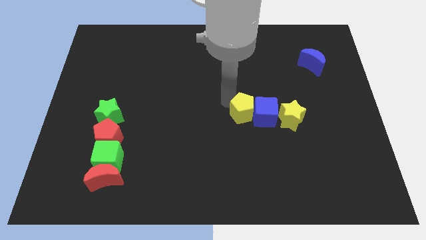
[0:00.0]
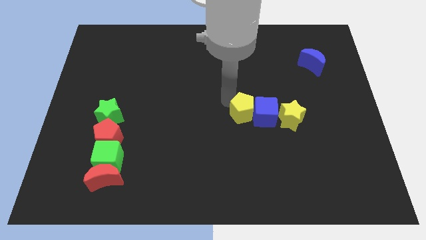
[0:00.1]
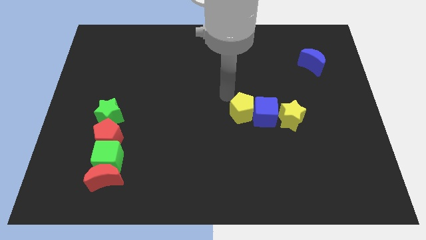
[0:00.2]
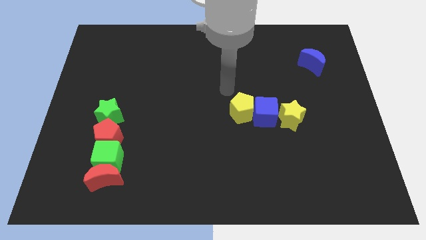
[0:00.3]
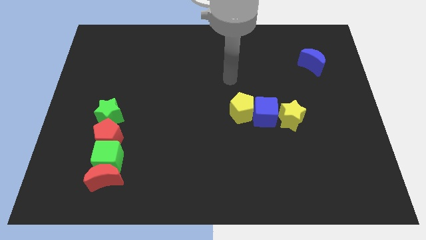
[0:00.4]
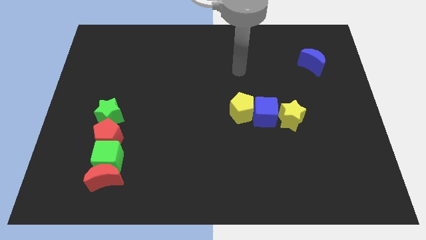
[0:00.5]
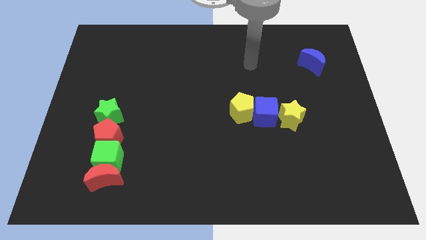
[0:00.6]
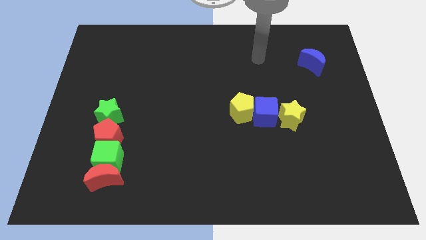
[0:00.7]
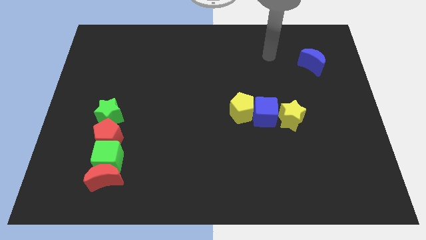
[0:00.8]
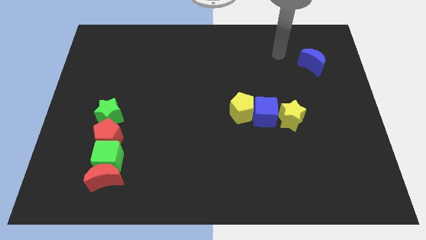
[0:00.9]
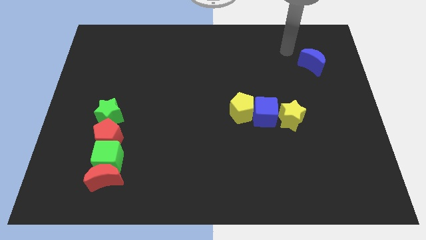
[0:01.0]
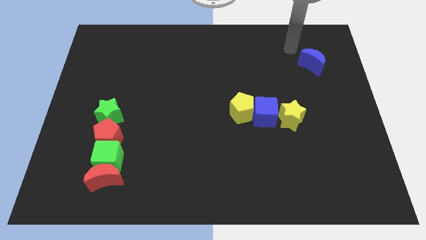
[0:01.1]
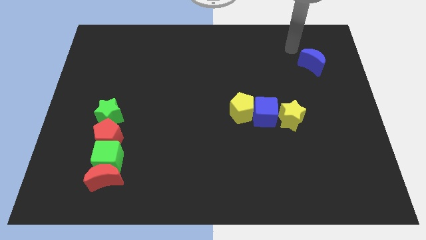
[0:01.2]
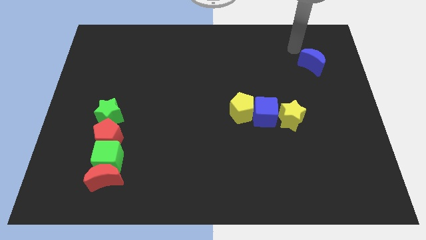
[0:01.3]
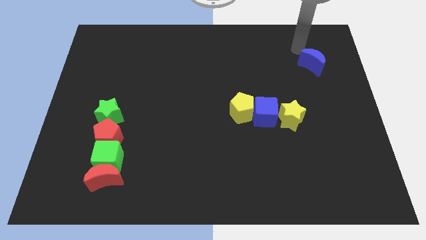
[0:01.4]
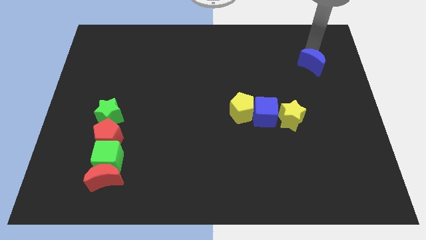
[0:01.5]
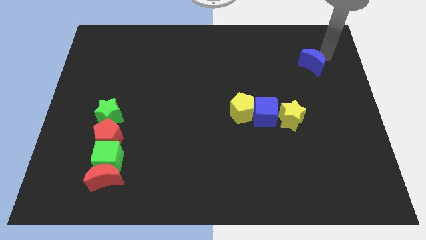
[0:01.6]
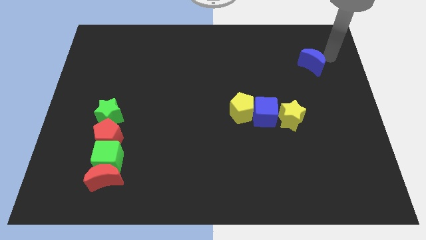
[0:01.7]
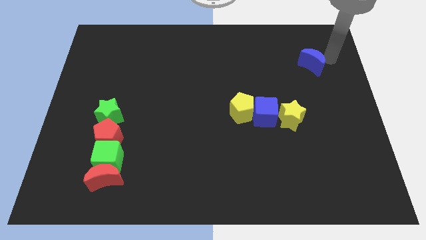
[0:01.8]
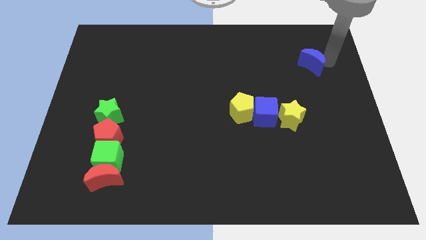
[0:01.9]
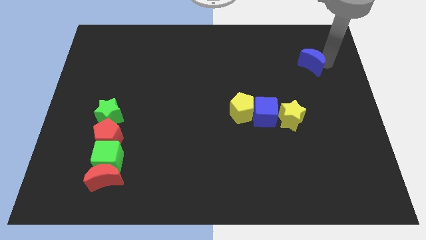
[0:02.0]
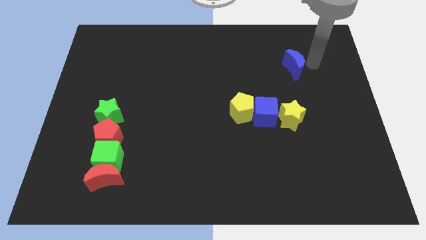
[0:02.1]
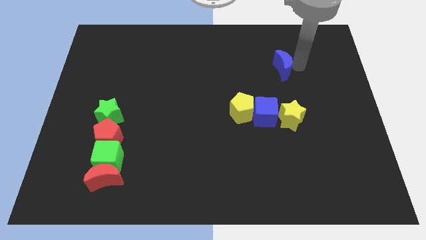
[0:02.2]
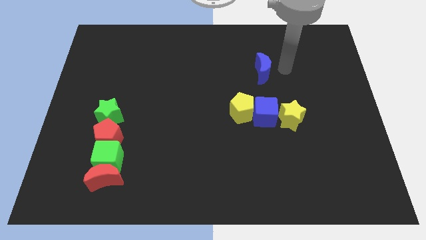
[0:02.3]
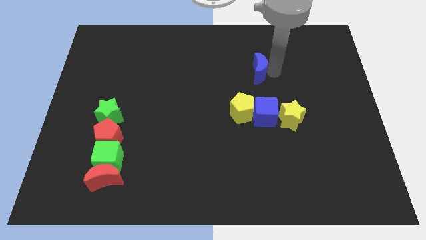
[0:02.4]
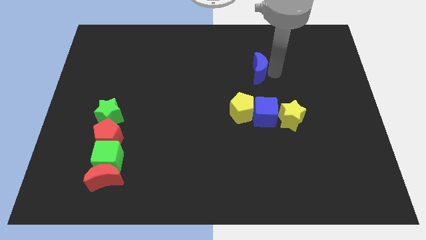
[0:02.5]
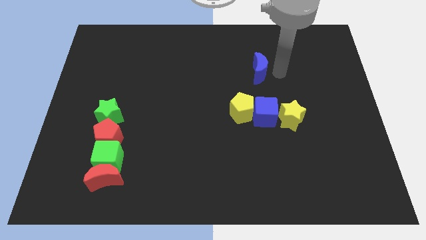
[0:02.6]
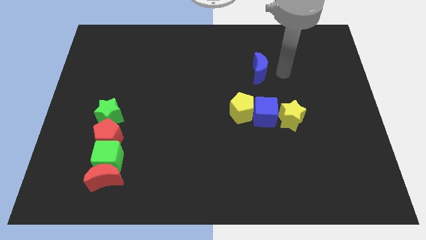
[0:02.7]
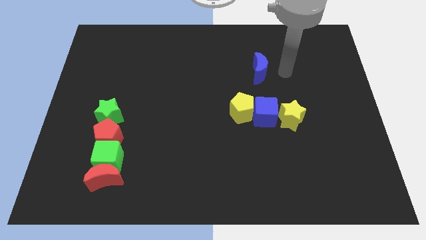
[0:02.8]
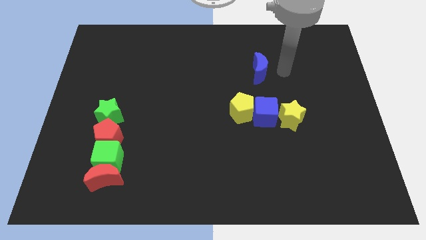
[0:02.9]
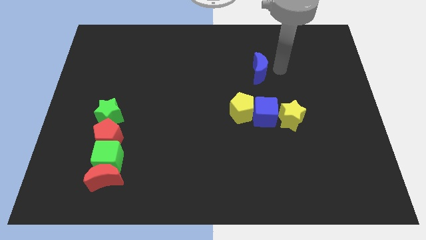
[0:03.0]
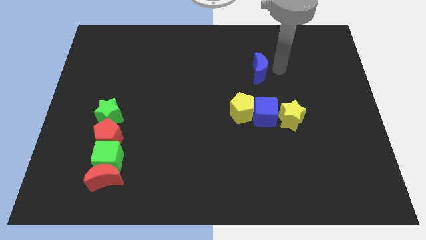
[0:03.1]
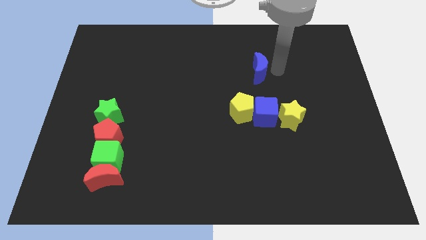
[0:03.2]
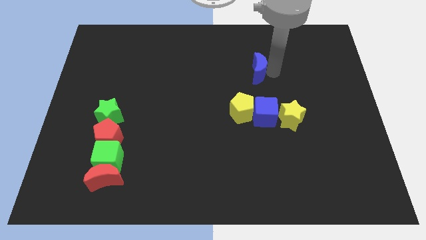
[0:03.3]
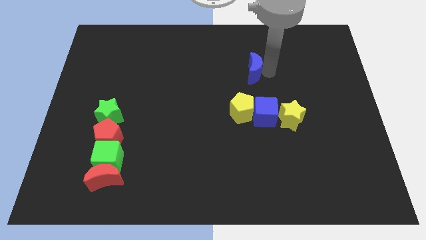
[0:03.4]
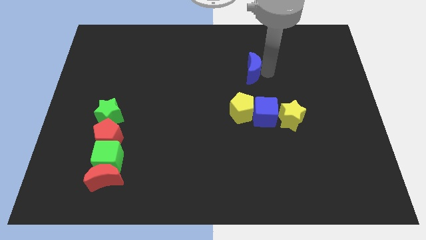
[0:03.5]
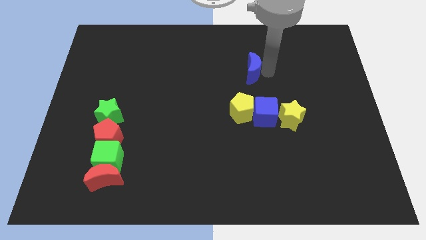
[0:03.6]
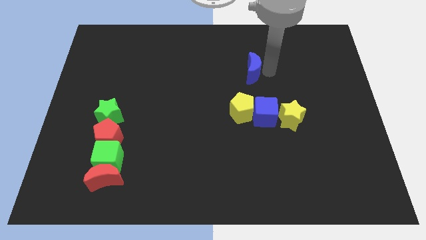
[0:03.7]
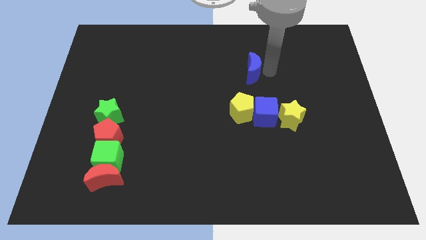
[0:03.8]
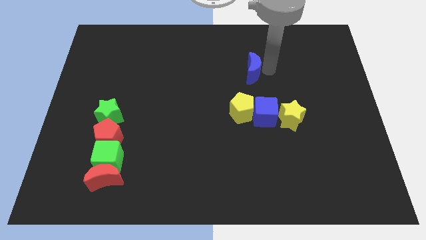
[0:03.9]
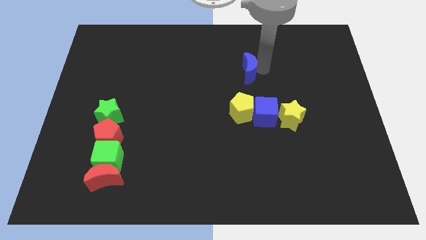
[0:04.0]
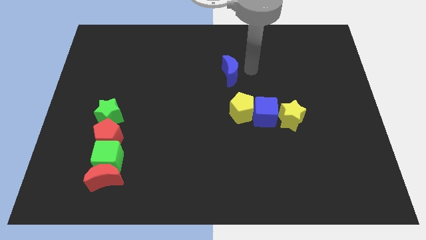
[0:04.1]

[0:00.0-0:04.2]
move the blue crescent at the top side of the yellow pentagon

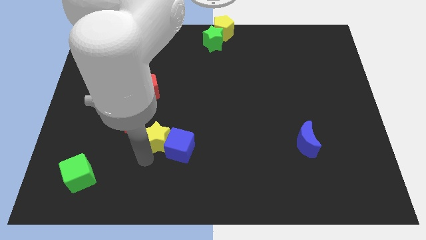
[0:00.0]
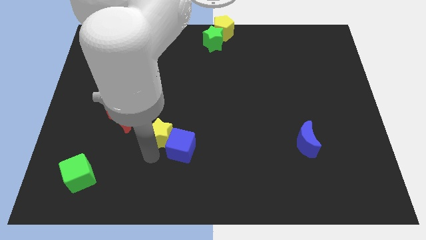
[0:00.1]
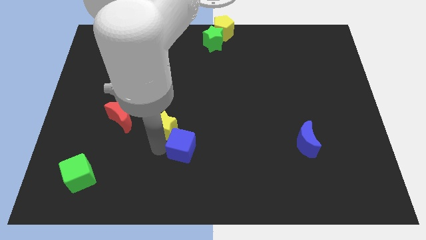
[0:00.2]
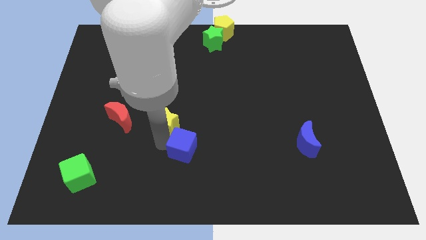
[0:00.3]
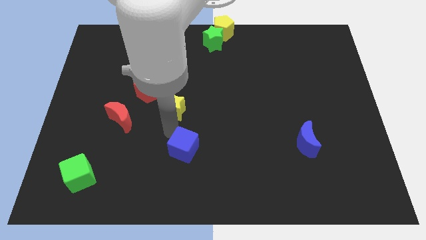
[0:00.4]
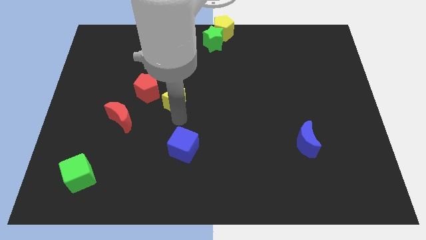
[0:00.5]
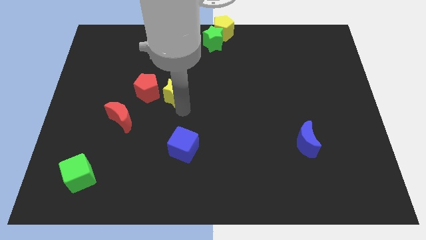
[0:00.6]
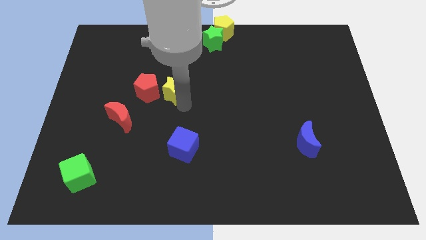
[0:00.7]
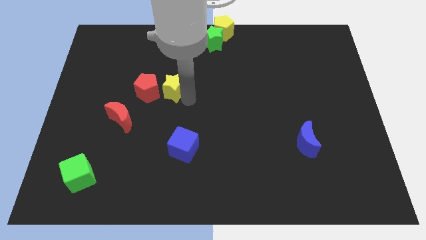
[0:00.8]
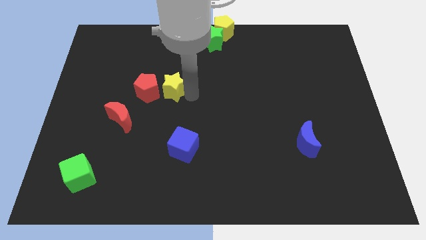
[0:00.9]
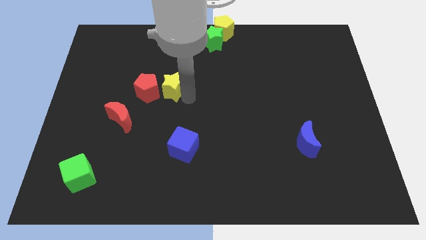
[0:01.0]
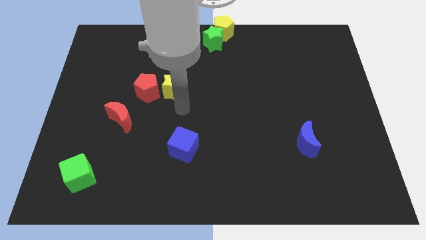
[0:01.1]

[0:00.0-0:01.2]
push the yellow star towards the right side of the red pentagon

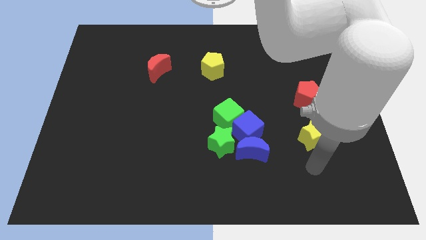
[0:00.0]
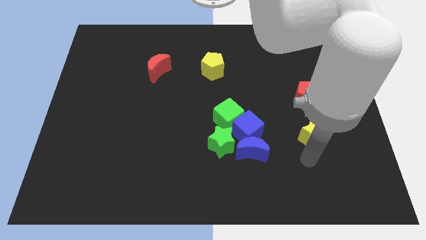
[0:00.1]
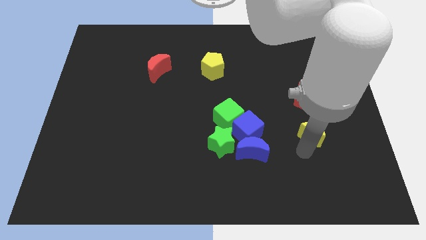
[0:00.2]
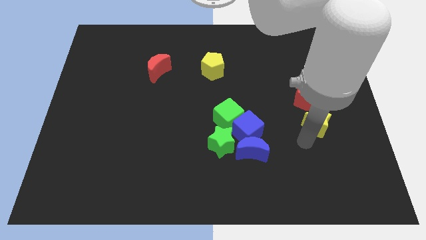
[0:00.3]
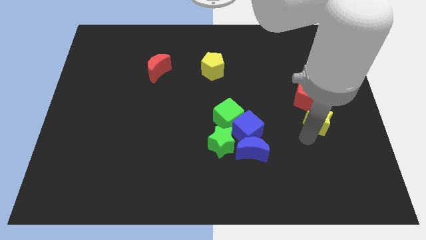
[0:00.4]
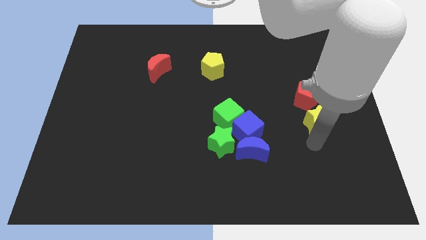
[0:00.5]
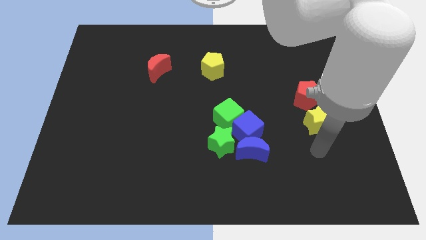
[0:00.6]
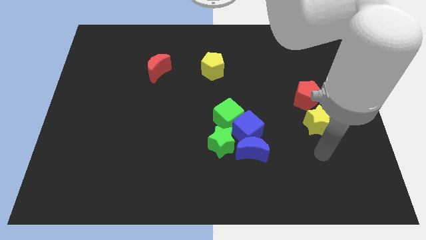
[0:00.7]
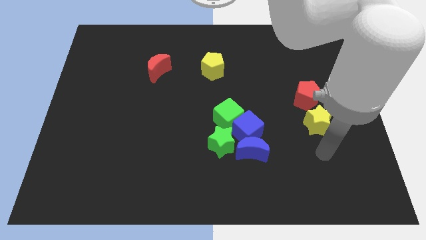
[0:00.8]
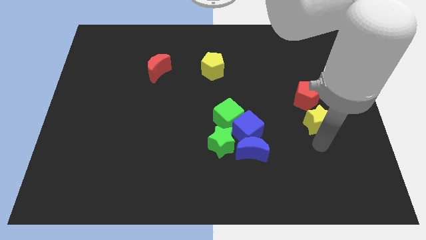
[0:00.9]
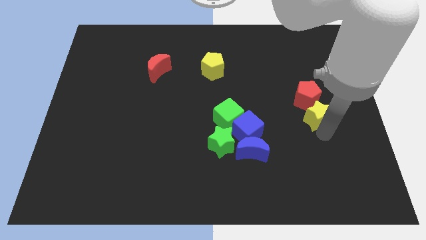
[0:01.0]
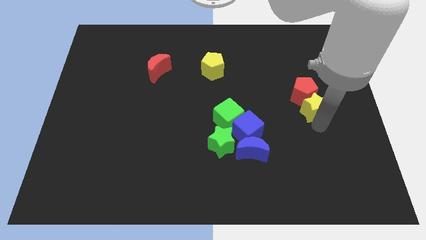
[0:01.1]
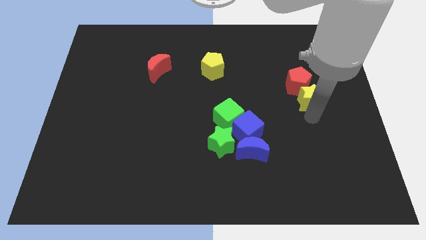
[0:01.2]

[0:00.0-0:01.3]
push the yellow star into the red pentagon

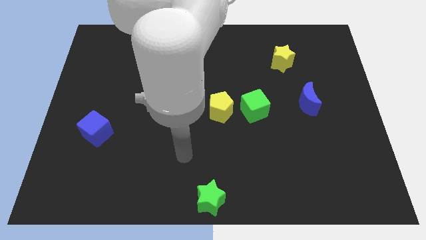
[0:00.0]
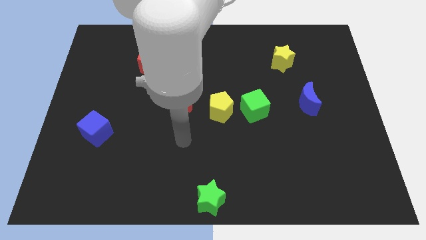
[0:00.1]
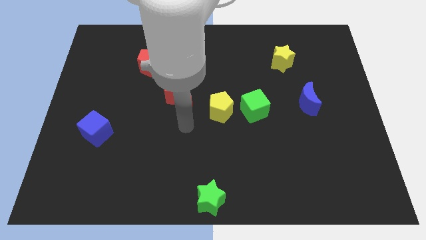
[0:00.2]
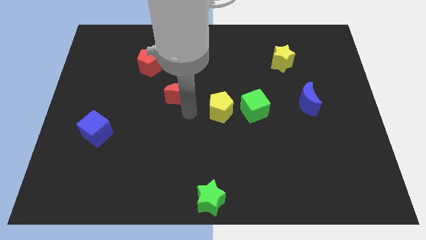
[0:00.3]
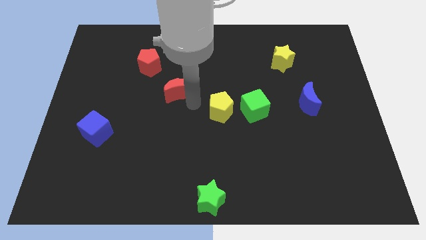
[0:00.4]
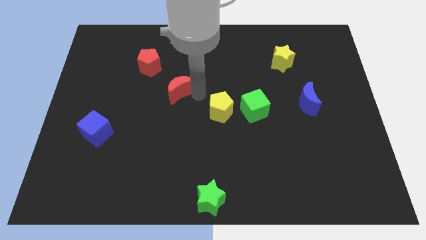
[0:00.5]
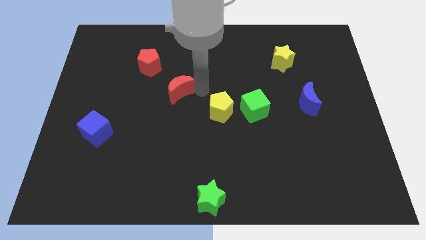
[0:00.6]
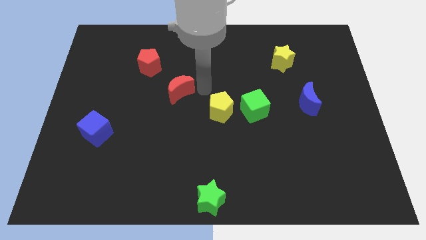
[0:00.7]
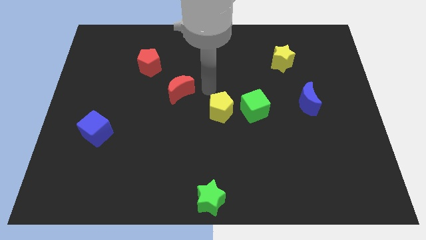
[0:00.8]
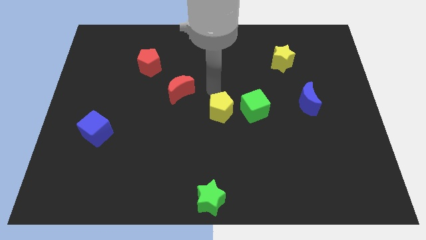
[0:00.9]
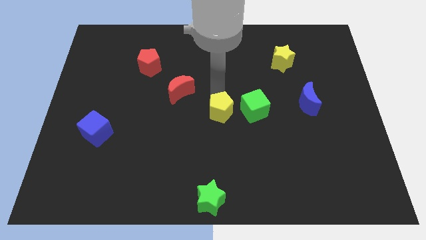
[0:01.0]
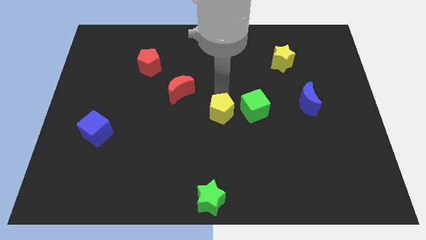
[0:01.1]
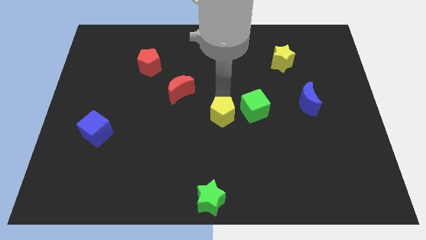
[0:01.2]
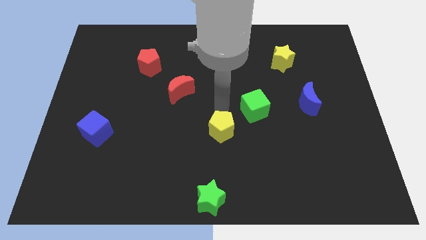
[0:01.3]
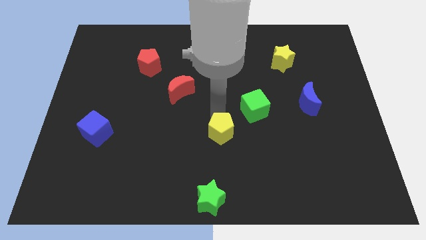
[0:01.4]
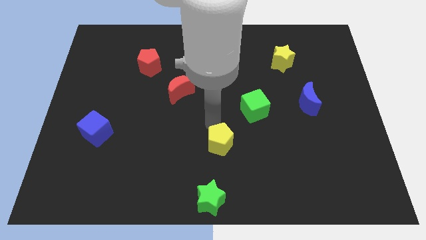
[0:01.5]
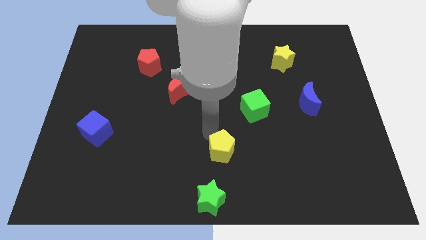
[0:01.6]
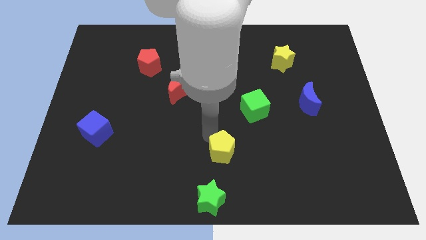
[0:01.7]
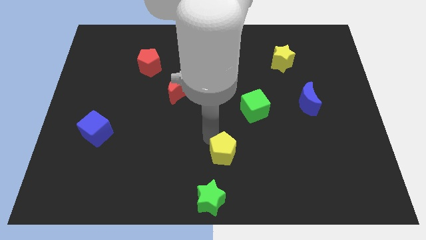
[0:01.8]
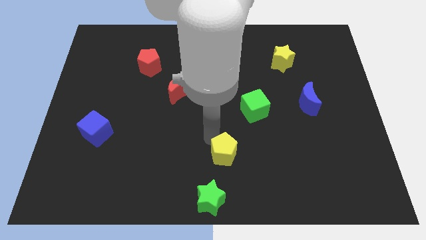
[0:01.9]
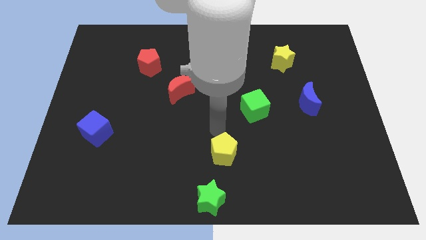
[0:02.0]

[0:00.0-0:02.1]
move the yellow pentagon slightly down

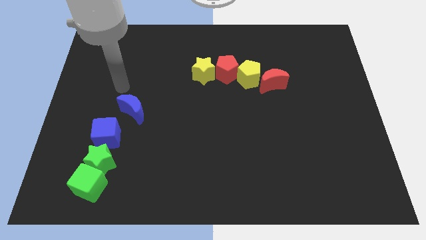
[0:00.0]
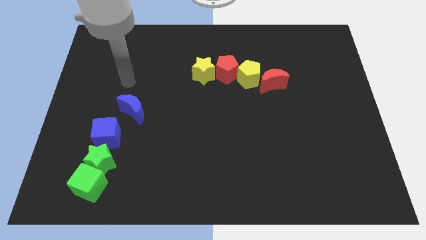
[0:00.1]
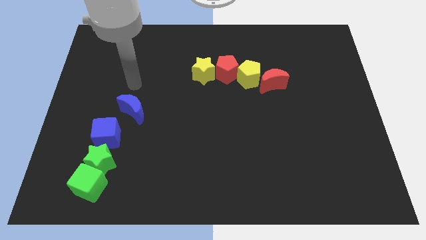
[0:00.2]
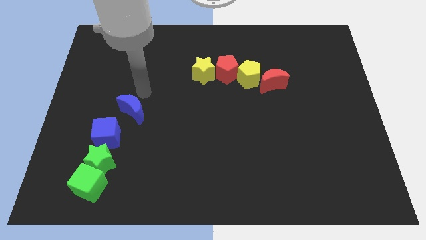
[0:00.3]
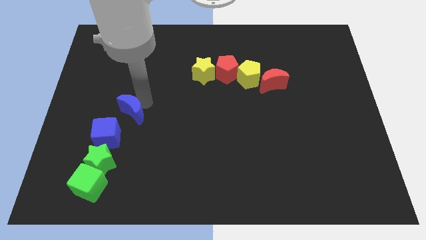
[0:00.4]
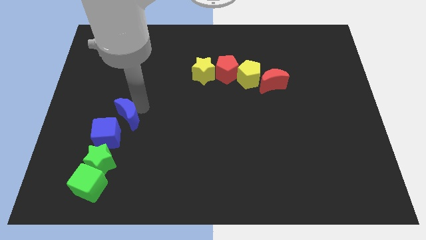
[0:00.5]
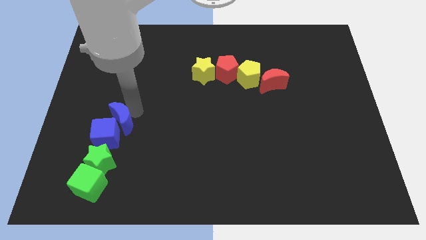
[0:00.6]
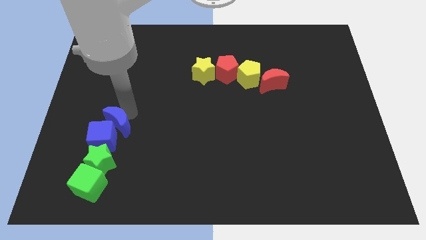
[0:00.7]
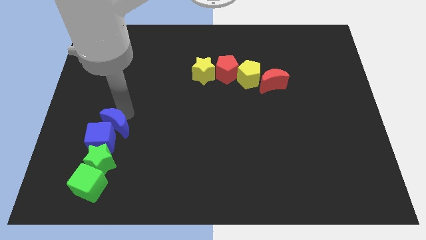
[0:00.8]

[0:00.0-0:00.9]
push blue moon into blue cube
